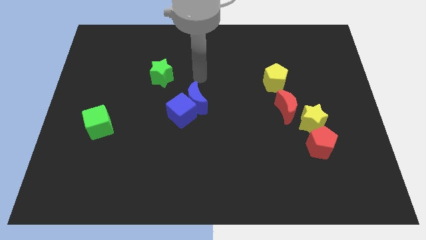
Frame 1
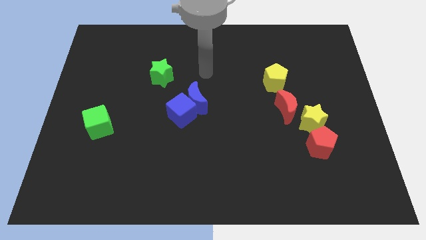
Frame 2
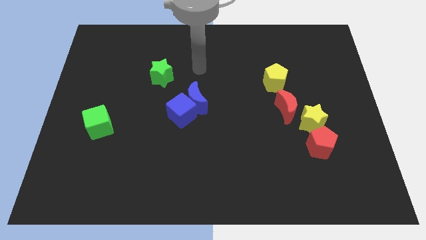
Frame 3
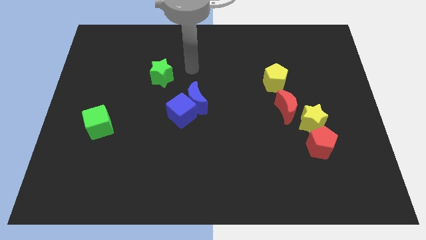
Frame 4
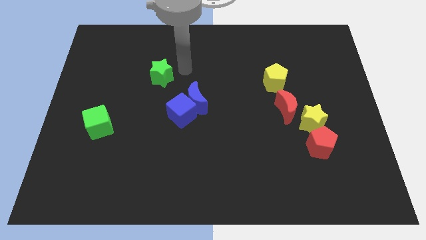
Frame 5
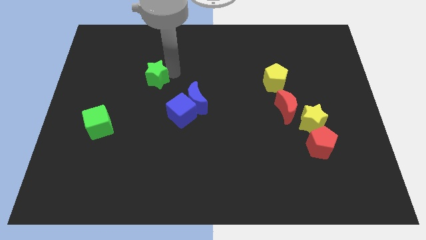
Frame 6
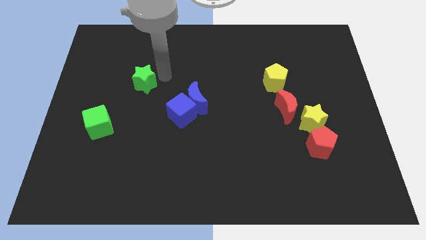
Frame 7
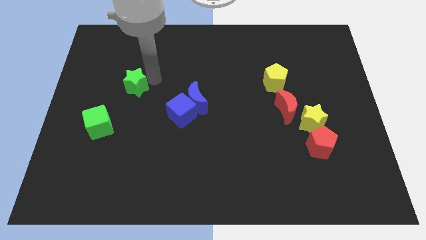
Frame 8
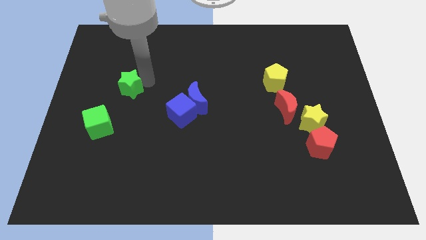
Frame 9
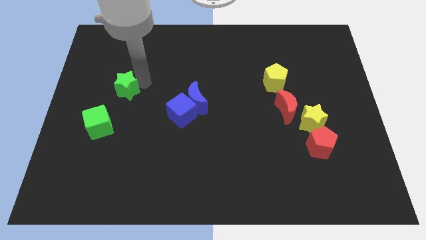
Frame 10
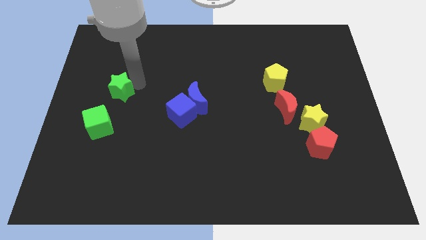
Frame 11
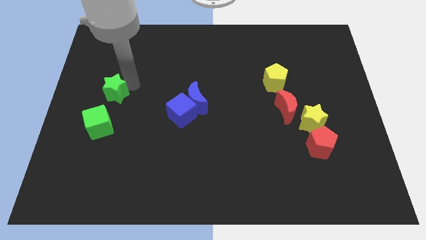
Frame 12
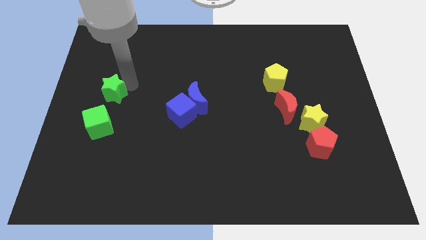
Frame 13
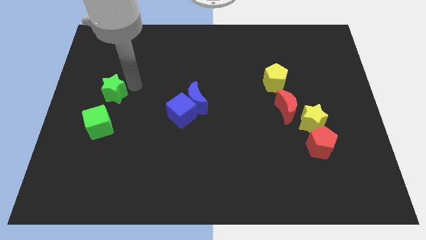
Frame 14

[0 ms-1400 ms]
place the green star diagonally towards the green cube

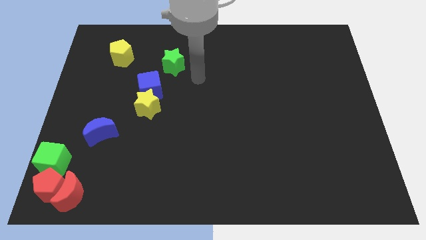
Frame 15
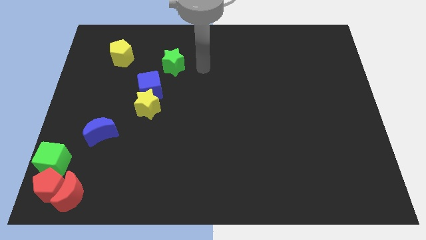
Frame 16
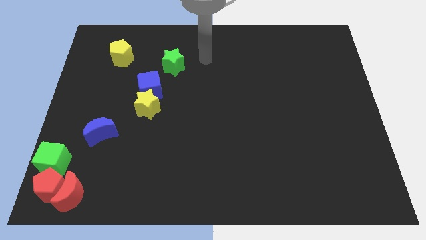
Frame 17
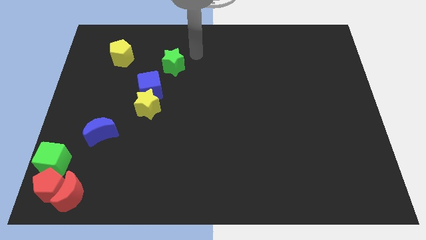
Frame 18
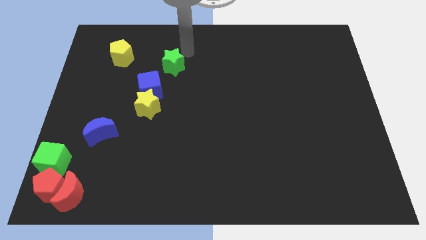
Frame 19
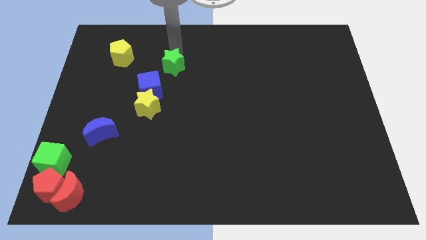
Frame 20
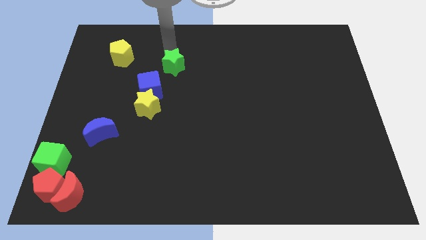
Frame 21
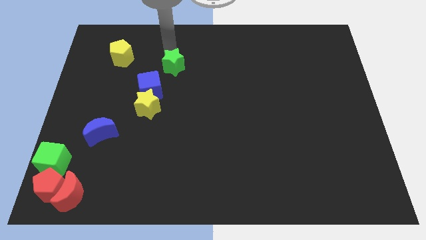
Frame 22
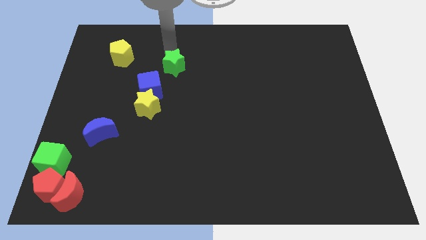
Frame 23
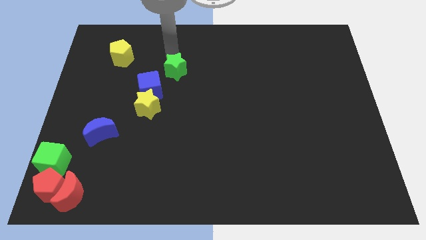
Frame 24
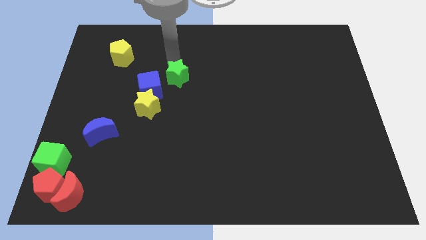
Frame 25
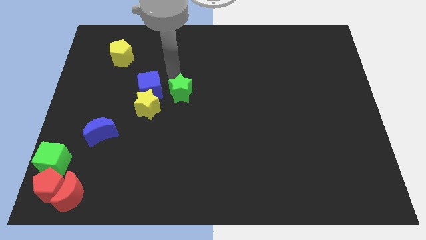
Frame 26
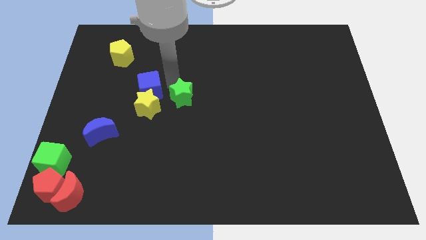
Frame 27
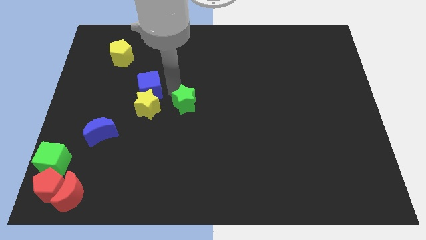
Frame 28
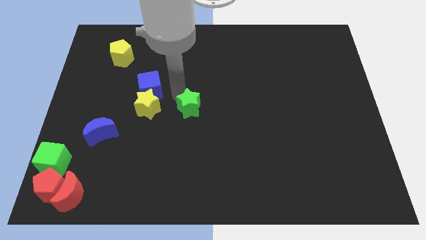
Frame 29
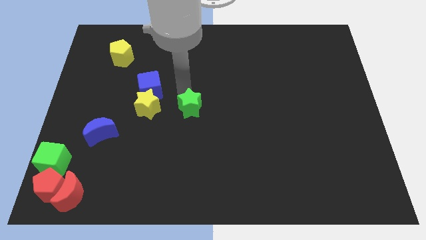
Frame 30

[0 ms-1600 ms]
place green star to the right of yellow star

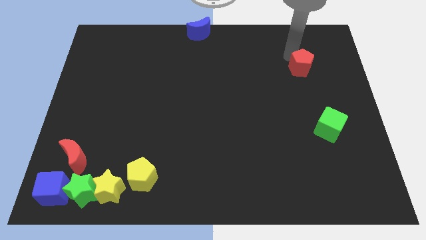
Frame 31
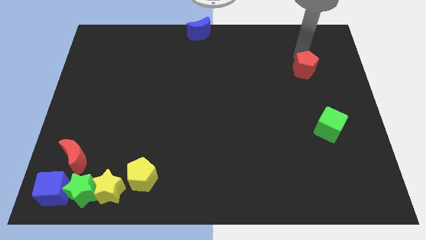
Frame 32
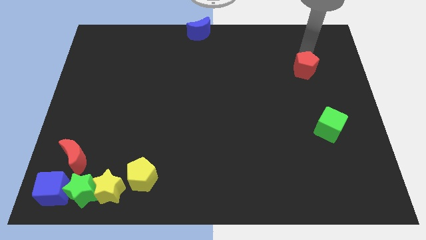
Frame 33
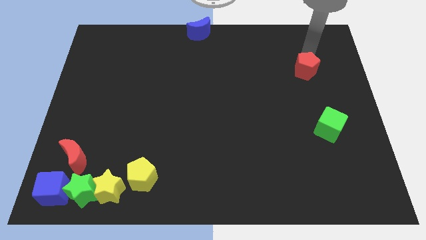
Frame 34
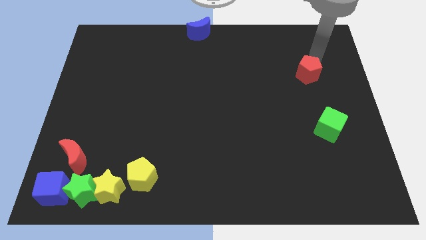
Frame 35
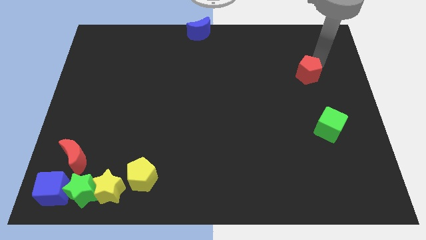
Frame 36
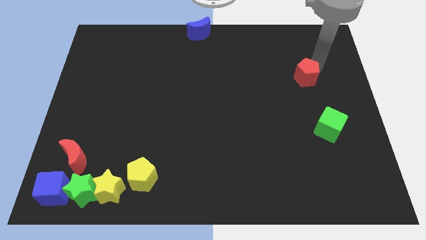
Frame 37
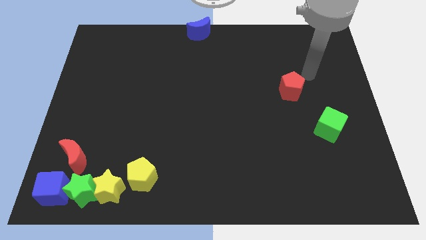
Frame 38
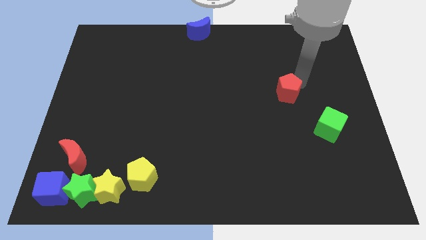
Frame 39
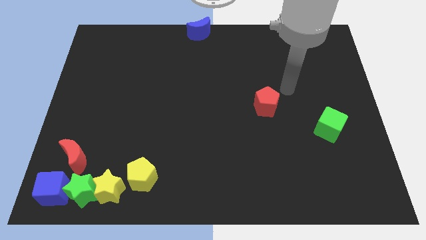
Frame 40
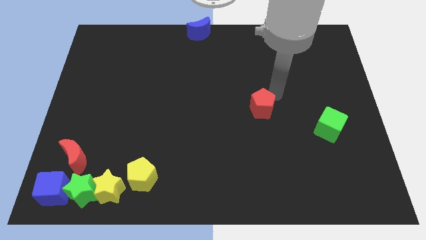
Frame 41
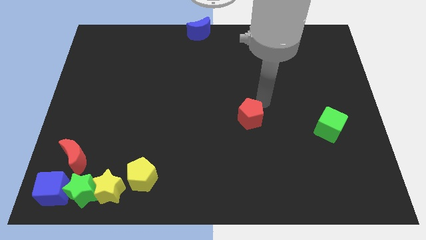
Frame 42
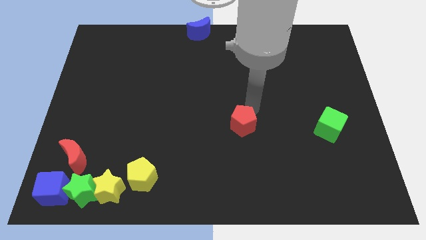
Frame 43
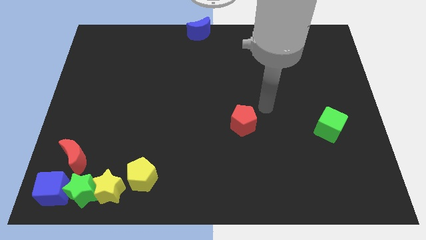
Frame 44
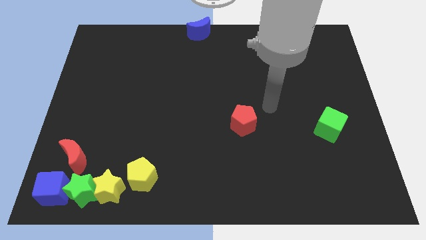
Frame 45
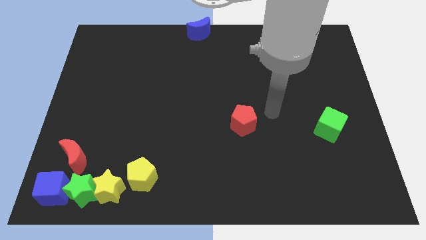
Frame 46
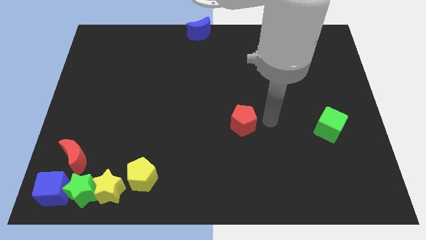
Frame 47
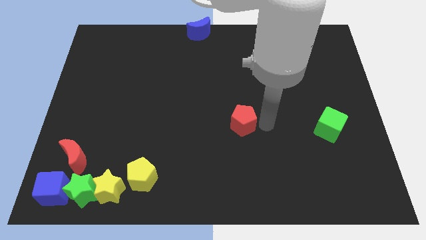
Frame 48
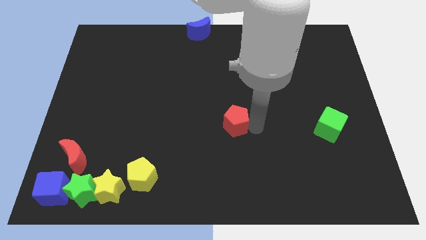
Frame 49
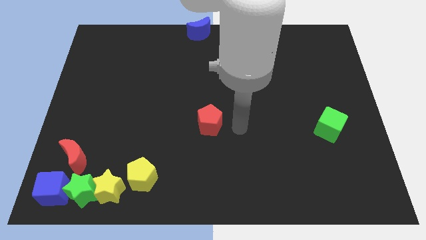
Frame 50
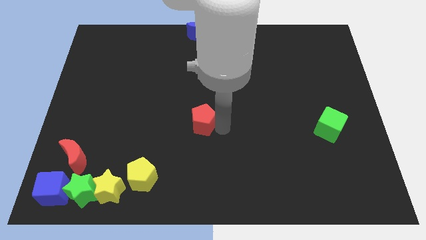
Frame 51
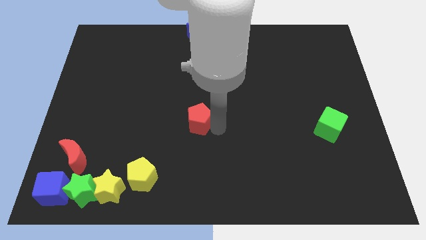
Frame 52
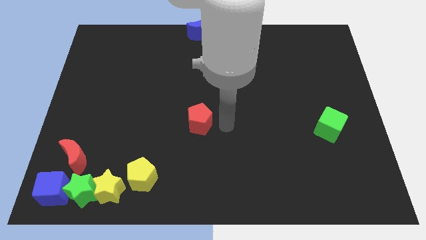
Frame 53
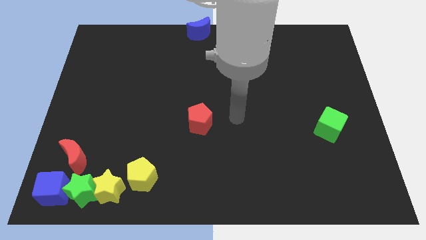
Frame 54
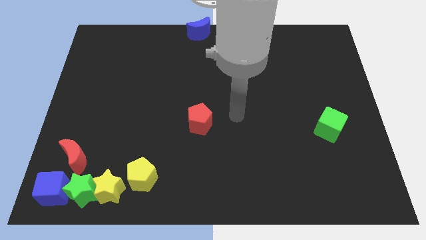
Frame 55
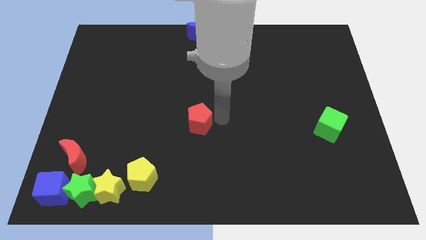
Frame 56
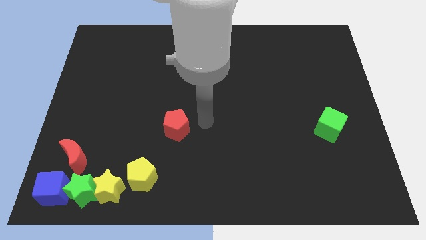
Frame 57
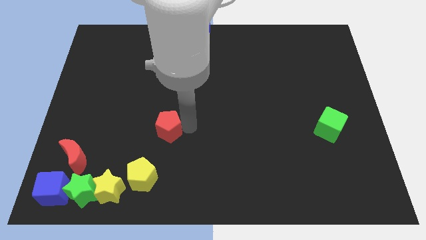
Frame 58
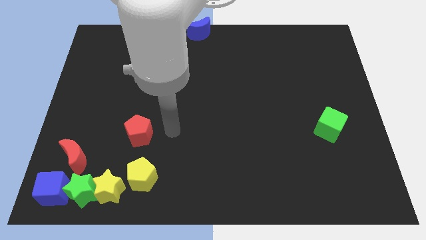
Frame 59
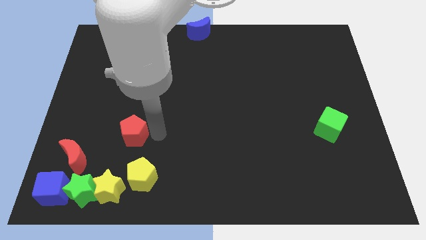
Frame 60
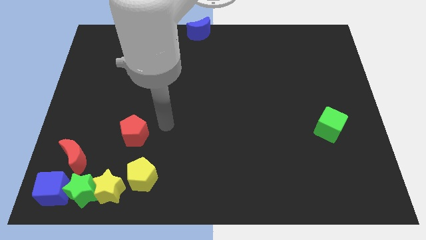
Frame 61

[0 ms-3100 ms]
move the red pentagon to the top of the yellow pentagon

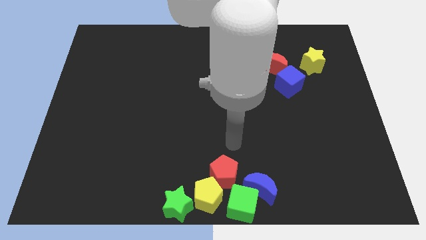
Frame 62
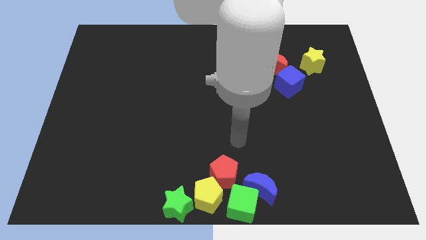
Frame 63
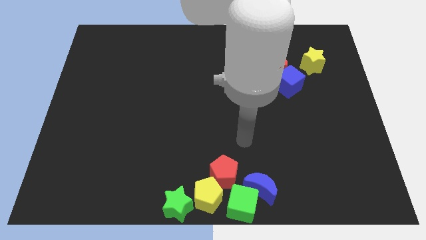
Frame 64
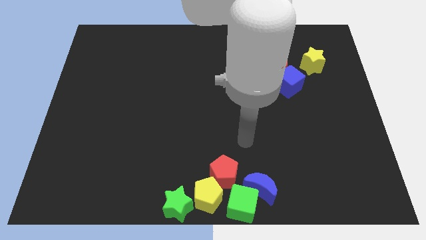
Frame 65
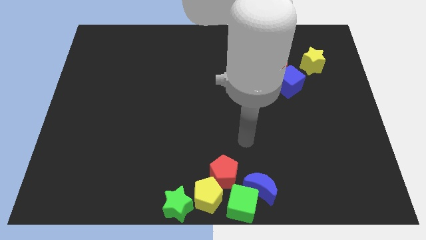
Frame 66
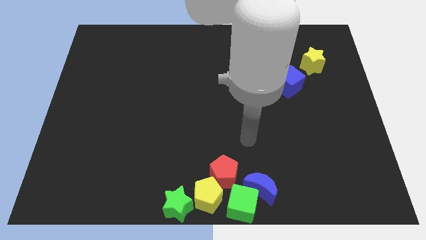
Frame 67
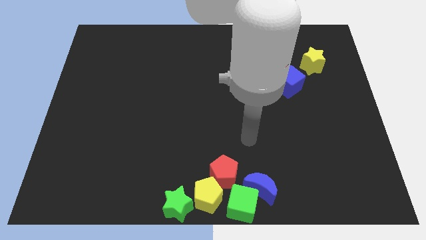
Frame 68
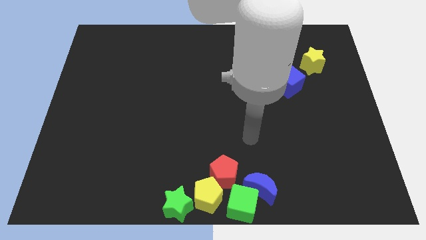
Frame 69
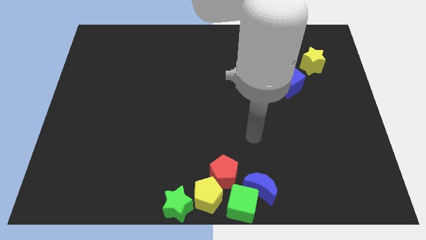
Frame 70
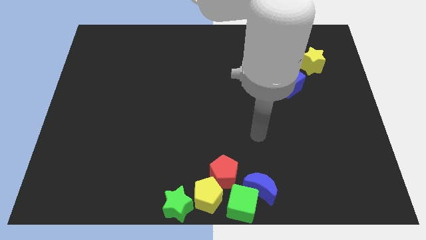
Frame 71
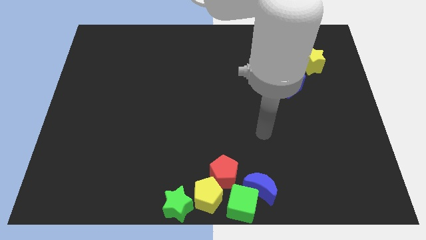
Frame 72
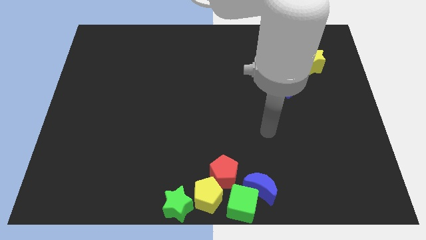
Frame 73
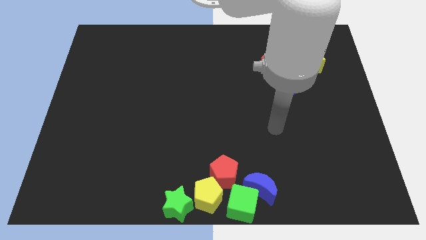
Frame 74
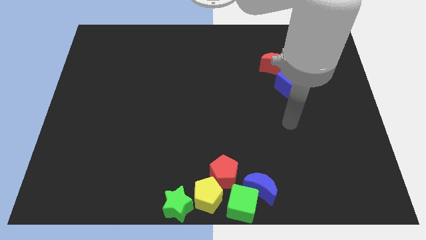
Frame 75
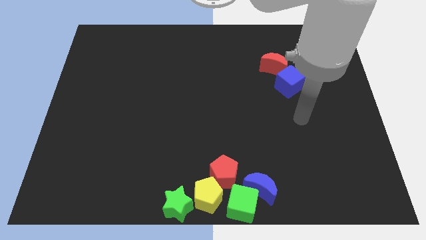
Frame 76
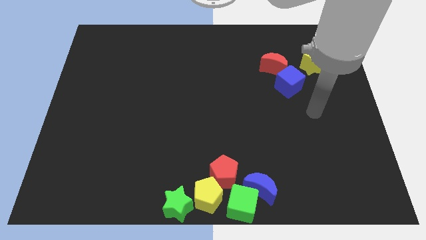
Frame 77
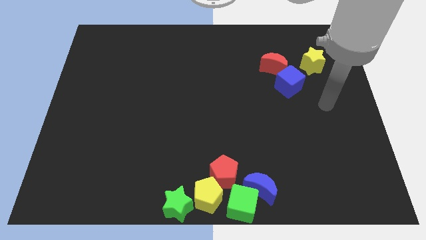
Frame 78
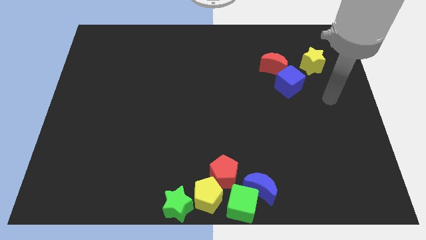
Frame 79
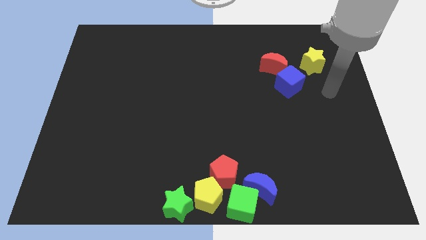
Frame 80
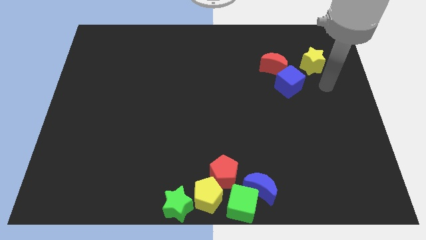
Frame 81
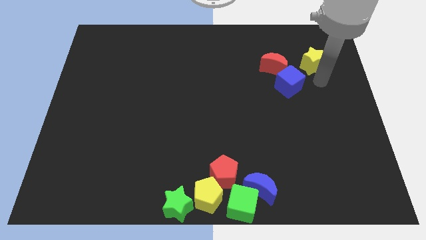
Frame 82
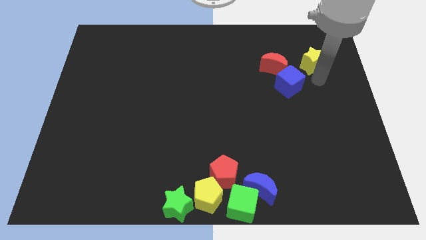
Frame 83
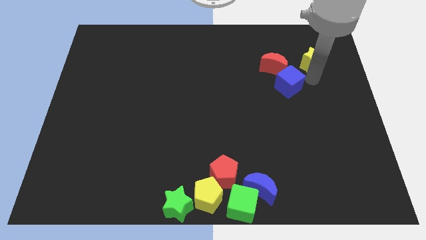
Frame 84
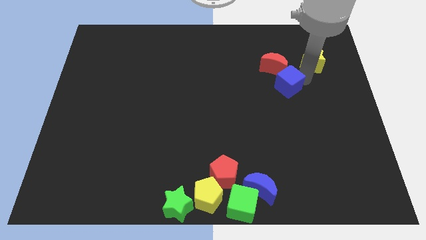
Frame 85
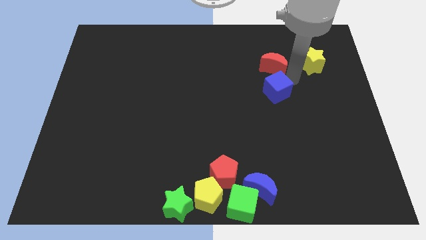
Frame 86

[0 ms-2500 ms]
move your arm right to the blue cube

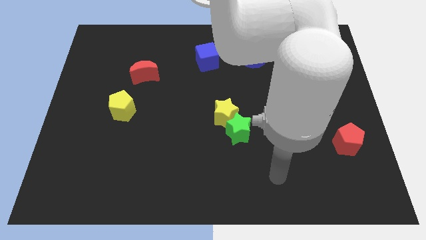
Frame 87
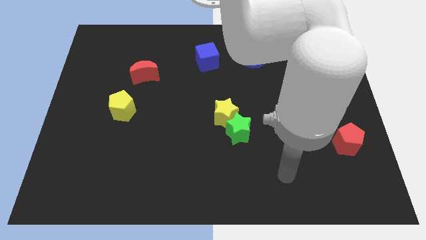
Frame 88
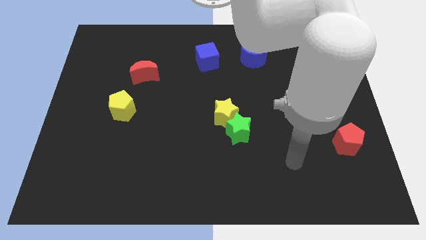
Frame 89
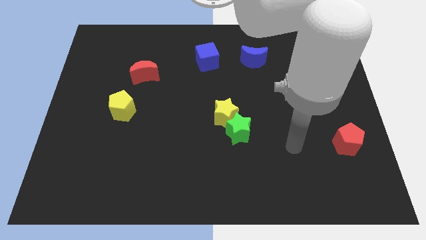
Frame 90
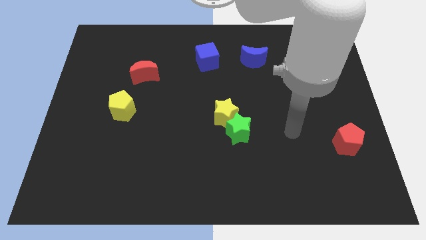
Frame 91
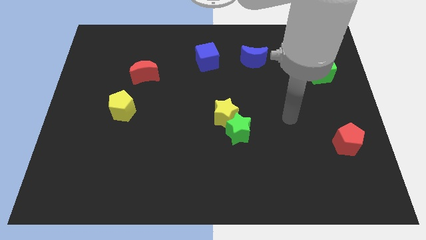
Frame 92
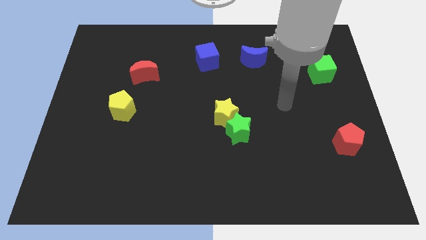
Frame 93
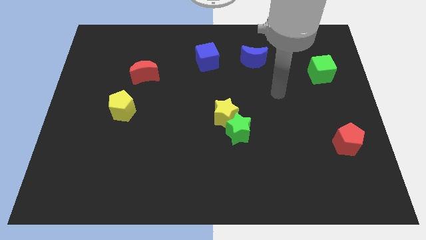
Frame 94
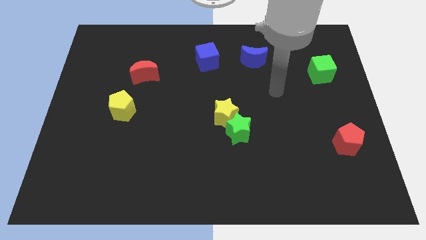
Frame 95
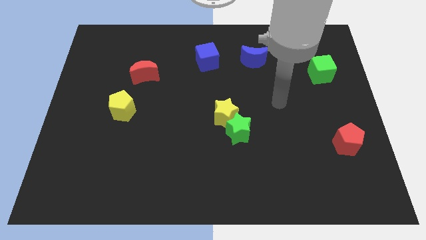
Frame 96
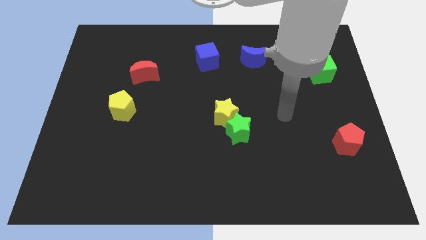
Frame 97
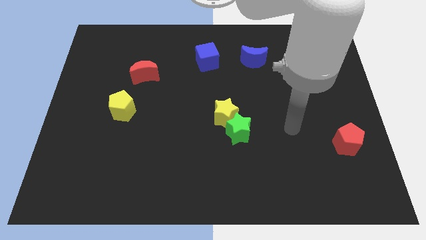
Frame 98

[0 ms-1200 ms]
move your arm towards the bottom side of the board
